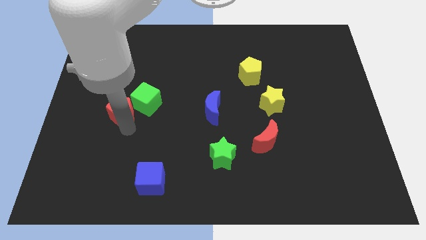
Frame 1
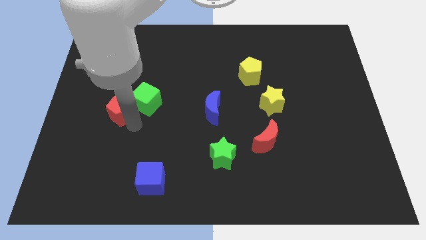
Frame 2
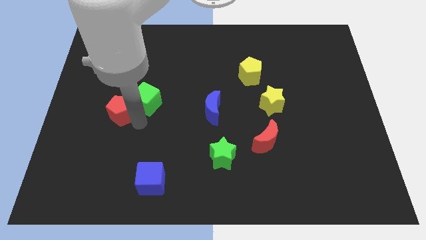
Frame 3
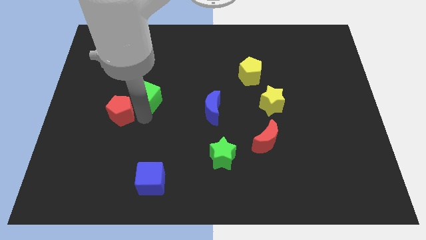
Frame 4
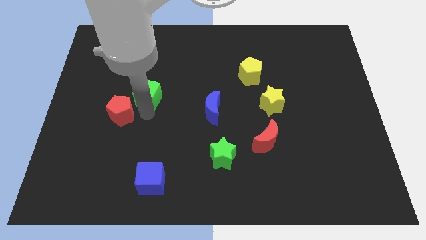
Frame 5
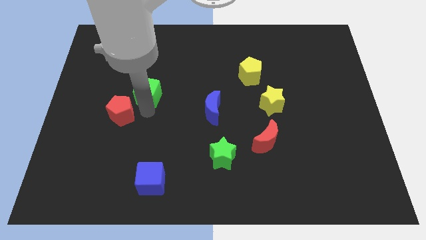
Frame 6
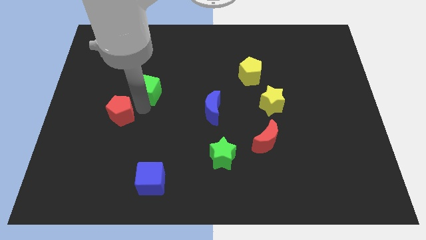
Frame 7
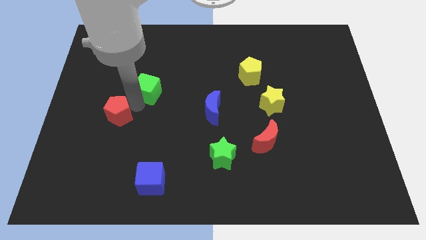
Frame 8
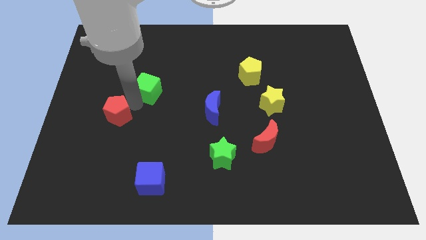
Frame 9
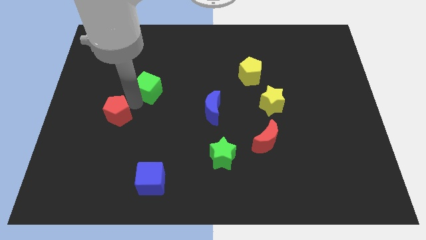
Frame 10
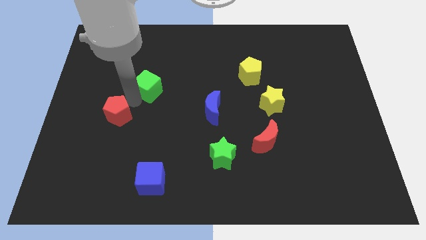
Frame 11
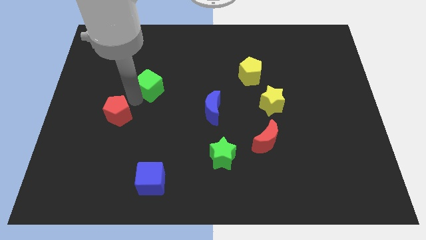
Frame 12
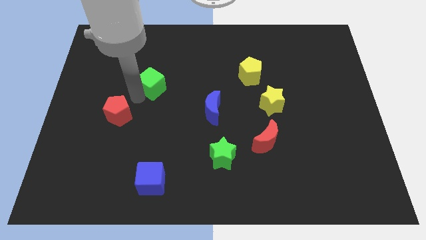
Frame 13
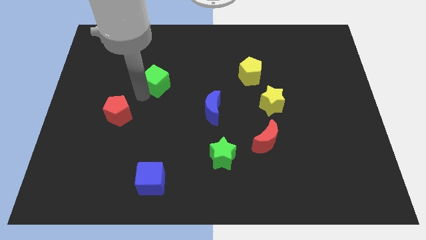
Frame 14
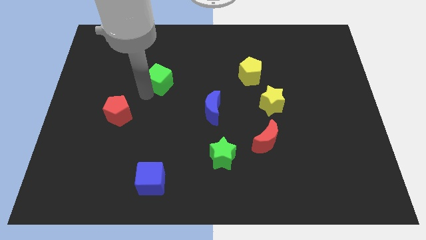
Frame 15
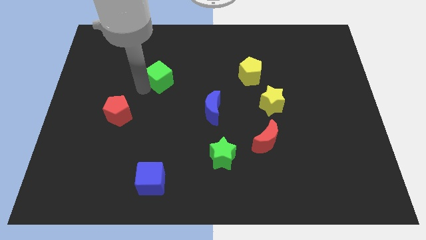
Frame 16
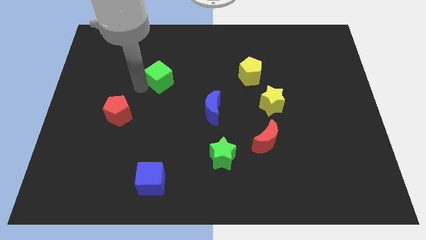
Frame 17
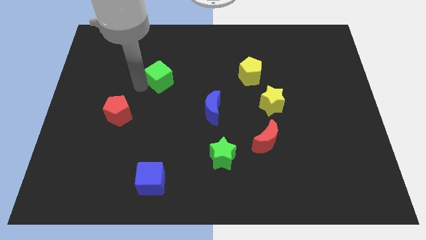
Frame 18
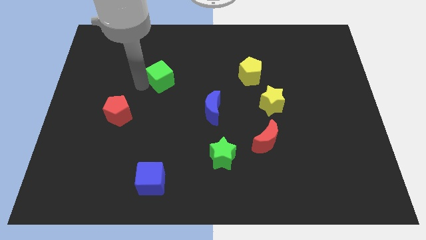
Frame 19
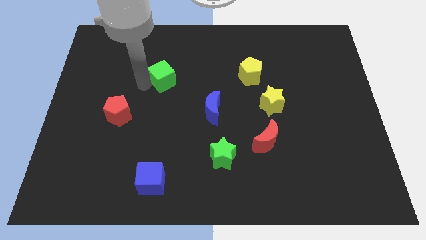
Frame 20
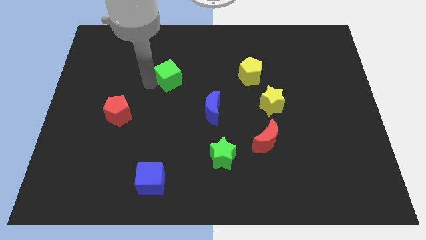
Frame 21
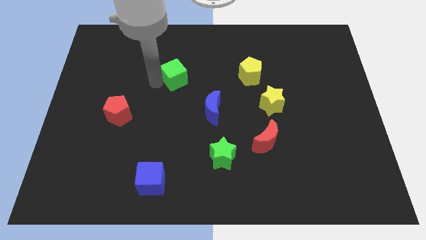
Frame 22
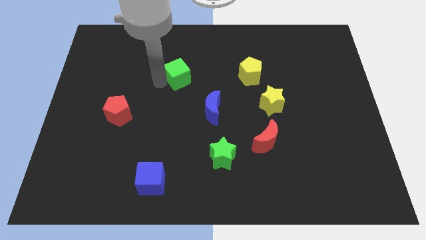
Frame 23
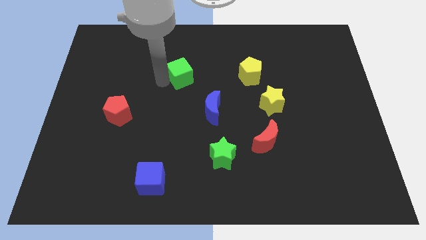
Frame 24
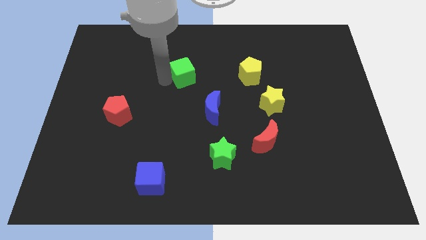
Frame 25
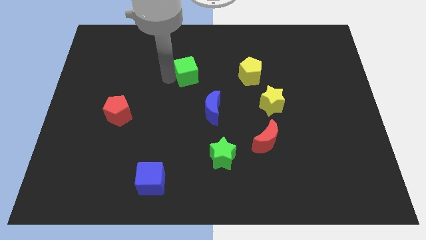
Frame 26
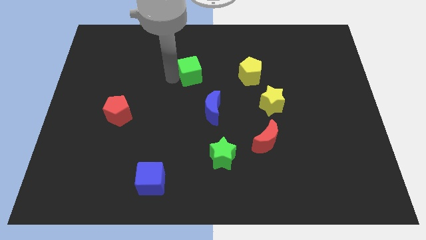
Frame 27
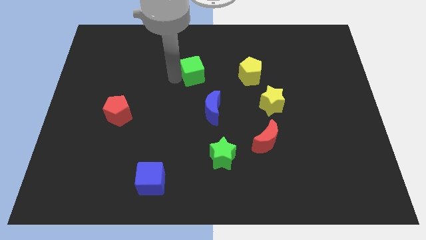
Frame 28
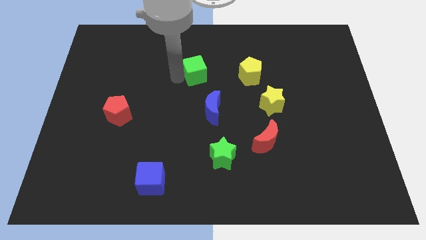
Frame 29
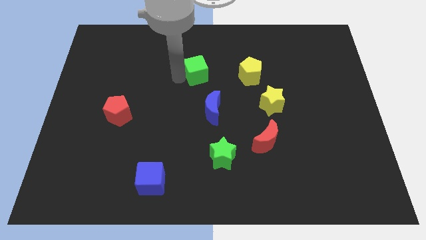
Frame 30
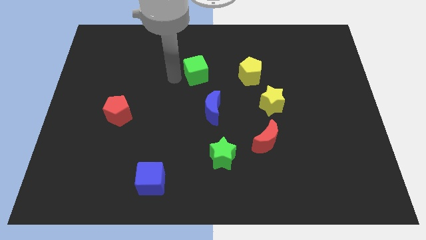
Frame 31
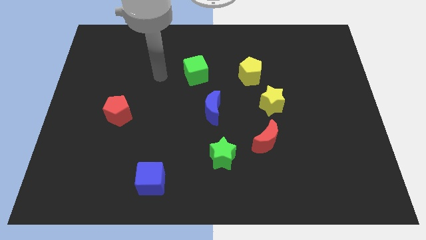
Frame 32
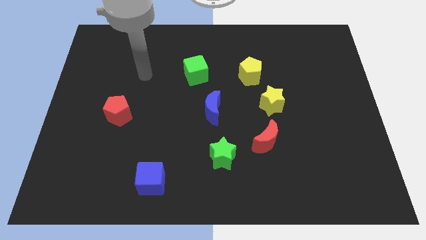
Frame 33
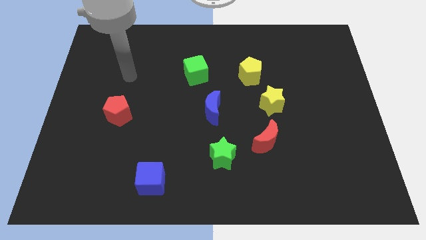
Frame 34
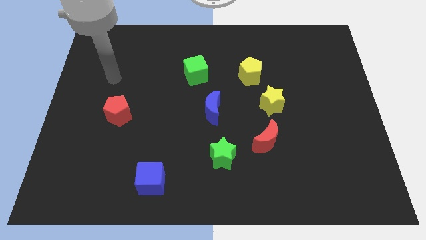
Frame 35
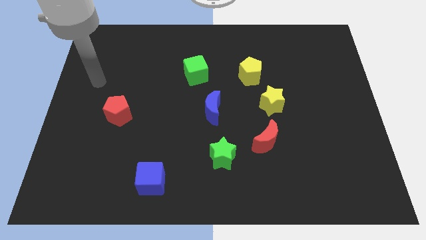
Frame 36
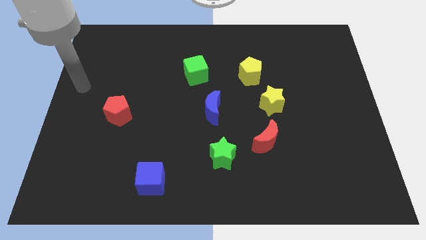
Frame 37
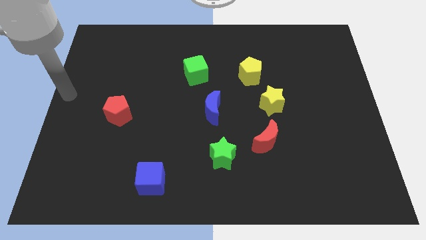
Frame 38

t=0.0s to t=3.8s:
place the green cube to the left of the yellow pentagon

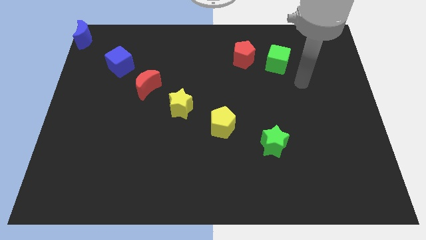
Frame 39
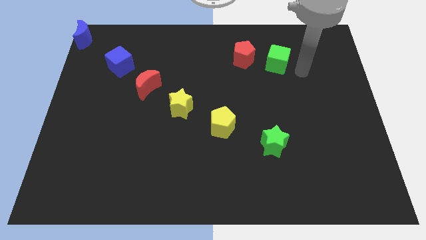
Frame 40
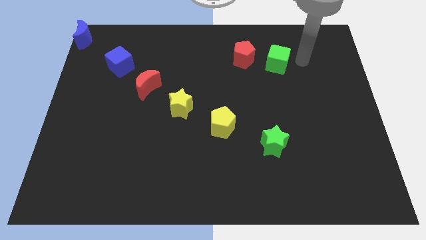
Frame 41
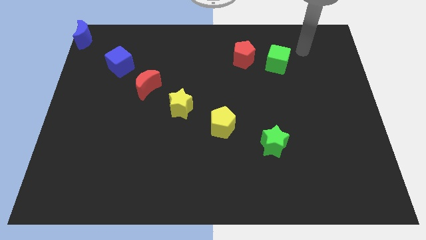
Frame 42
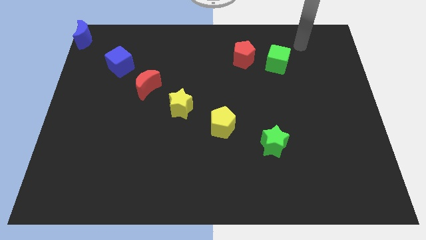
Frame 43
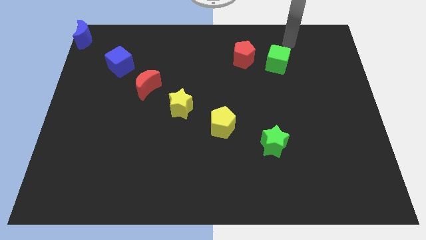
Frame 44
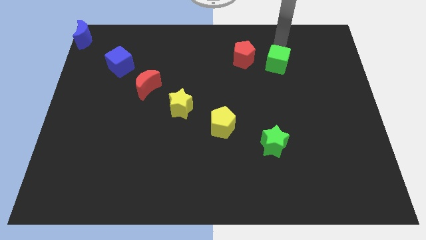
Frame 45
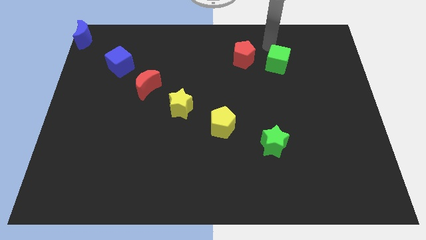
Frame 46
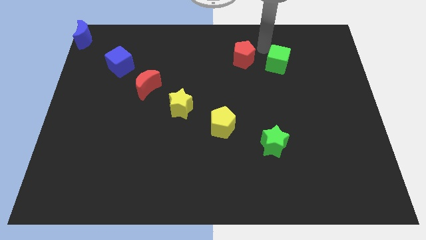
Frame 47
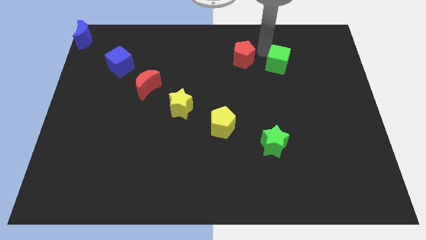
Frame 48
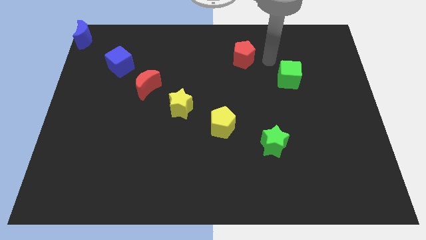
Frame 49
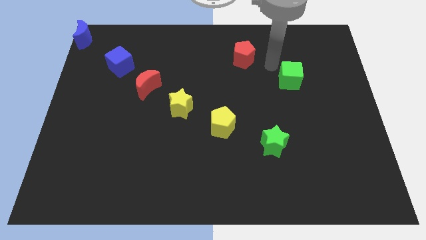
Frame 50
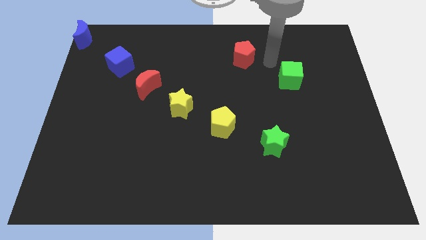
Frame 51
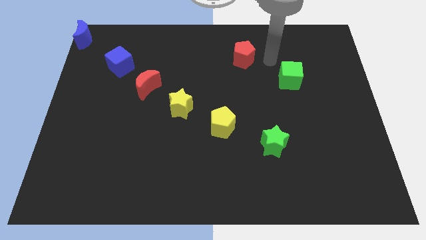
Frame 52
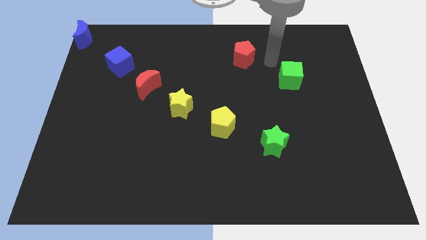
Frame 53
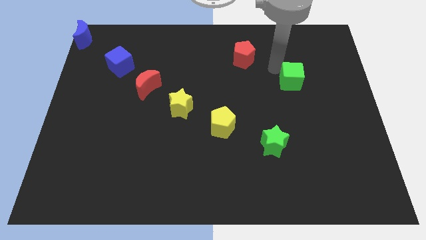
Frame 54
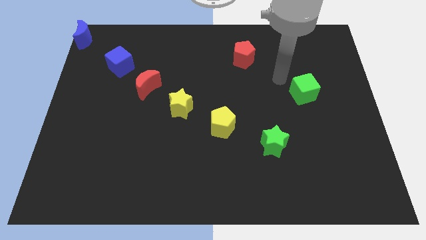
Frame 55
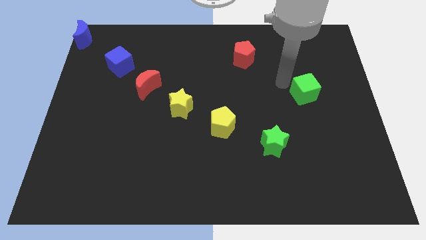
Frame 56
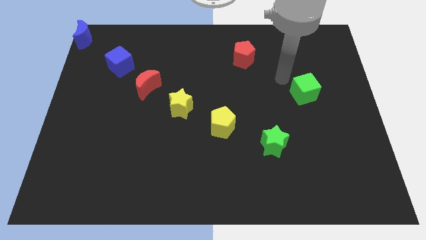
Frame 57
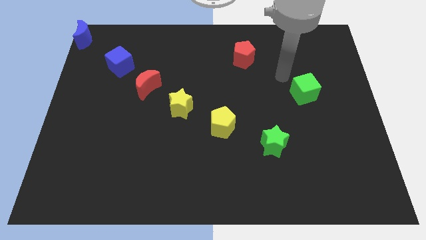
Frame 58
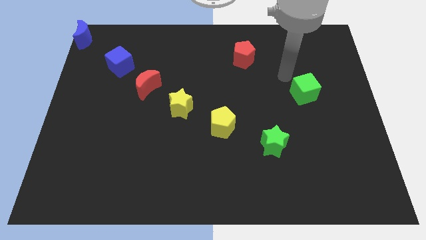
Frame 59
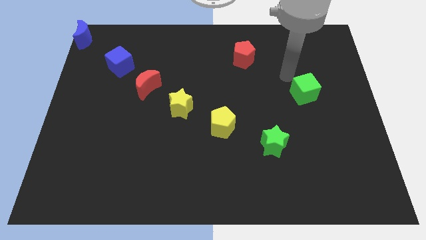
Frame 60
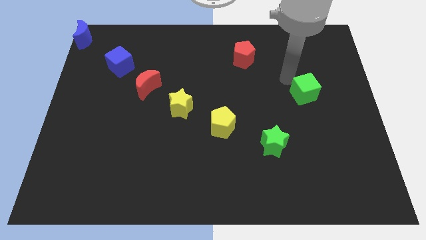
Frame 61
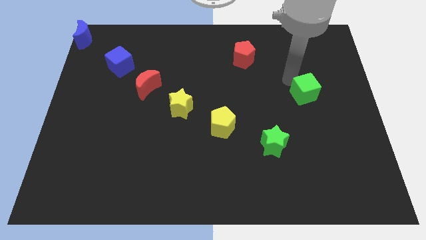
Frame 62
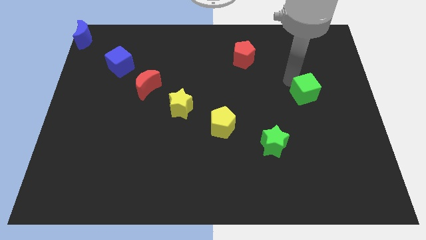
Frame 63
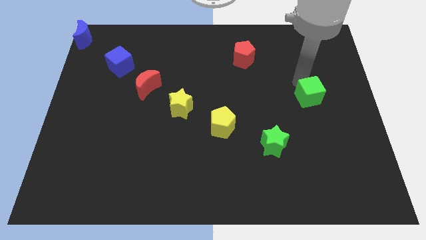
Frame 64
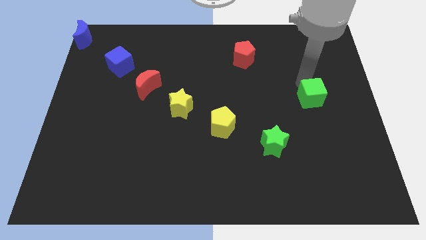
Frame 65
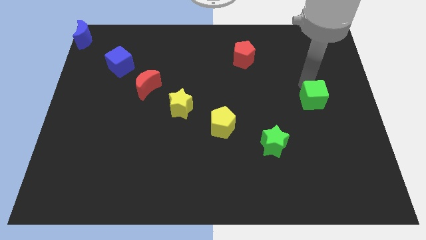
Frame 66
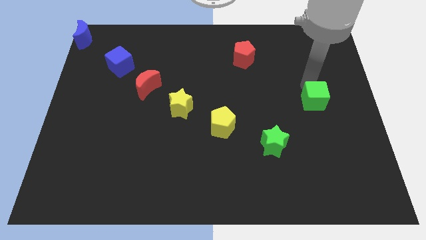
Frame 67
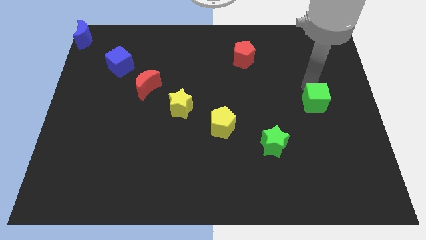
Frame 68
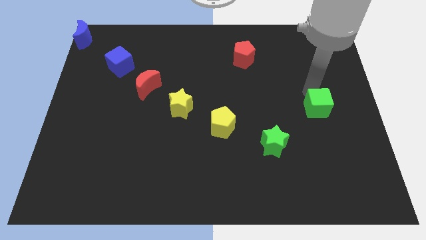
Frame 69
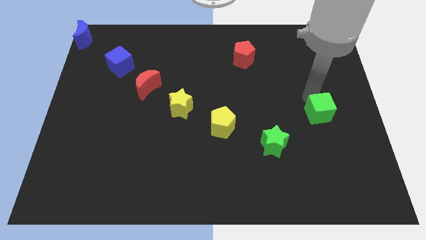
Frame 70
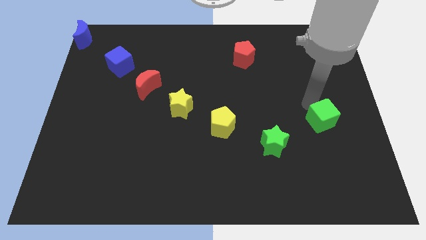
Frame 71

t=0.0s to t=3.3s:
push the green cube to the top right of the yellow pentagon

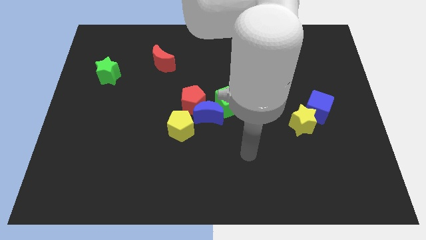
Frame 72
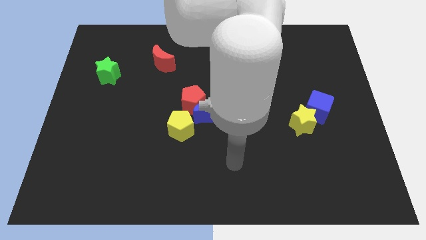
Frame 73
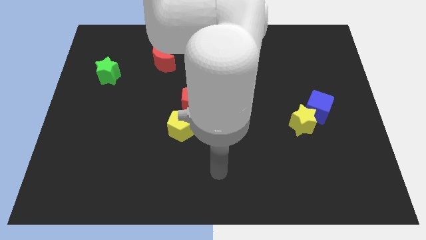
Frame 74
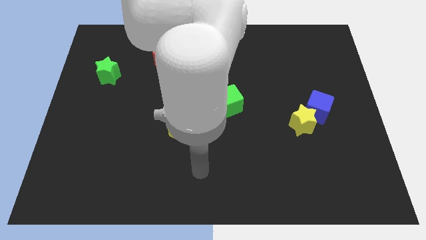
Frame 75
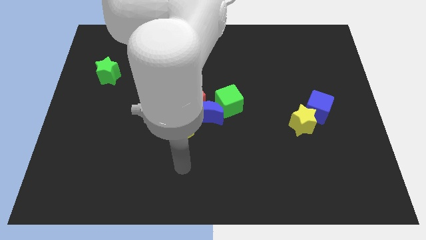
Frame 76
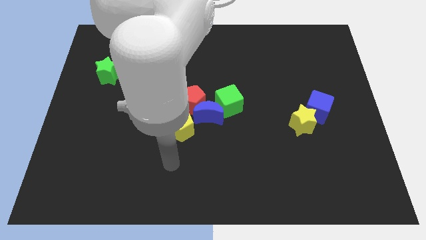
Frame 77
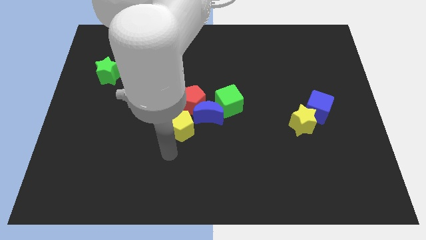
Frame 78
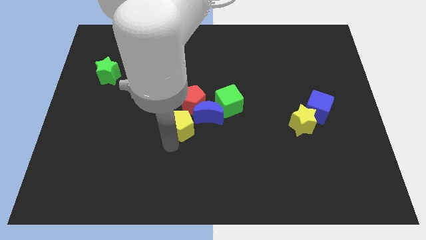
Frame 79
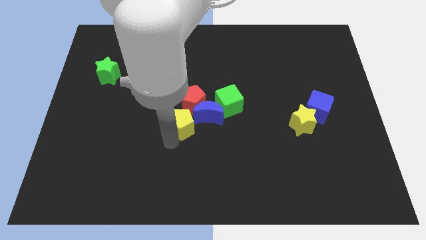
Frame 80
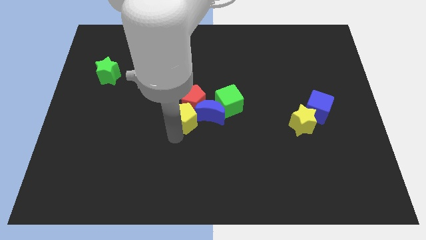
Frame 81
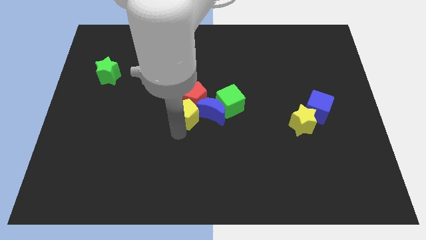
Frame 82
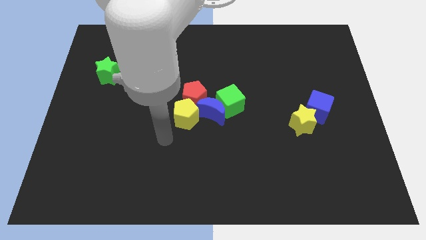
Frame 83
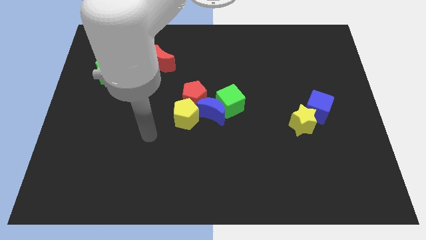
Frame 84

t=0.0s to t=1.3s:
push yellow pentagon into red pentagon

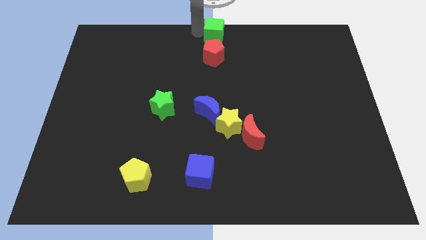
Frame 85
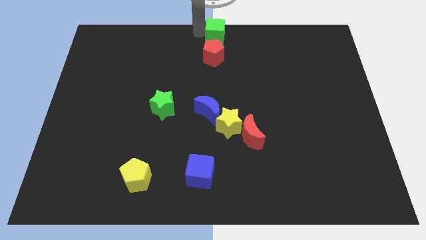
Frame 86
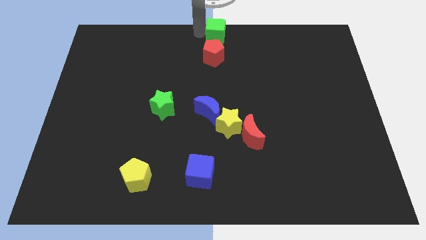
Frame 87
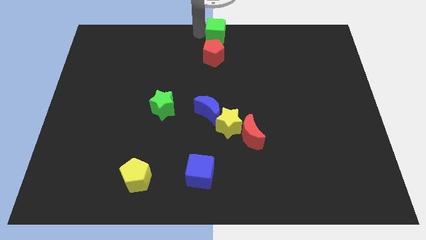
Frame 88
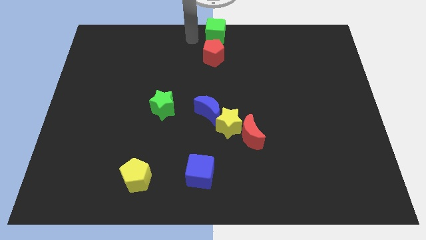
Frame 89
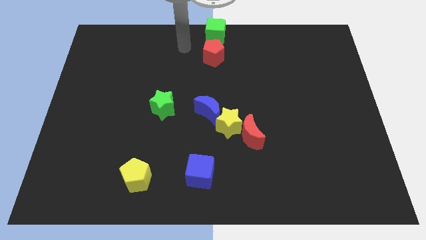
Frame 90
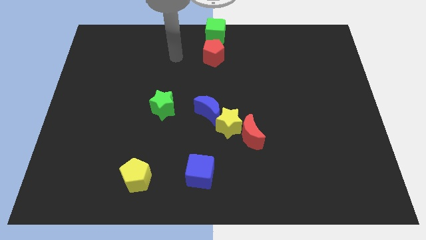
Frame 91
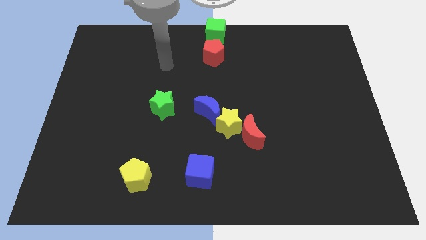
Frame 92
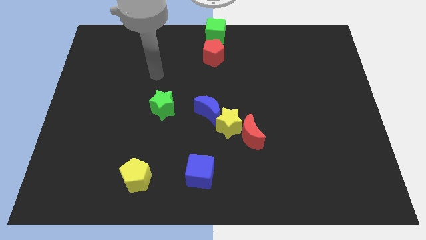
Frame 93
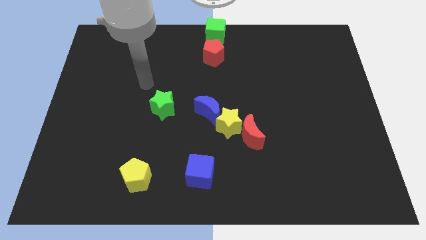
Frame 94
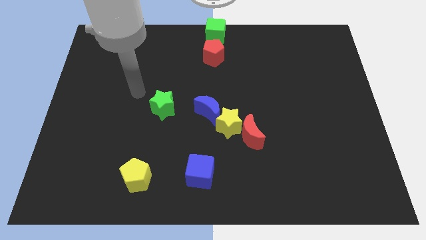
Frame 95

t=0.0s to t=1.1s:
move your arm away from green cube
